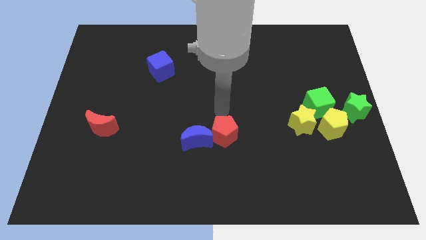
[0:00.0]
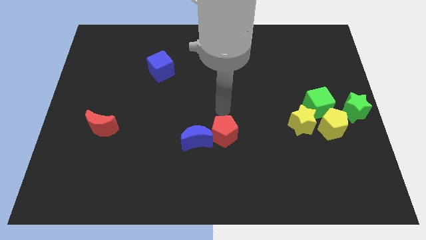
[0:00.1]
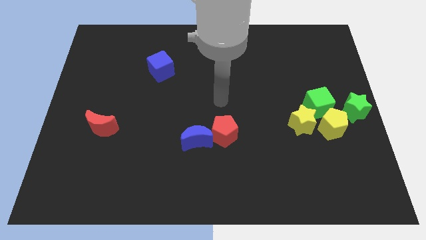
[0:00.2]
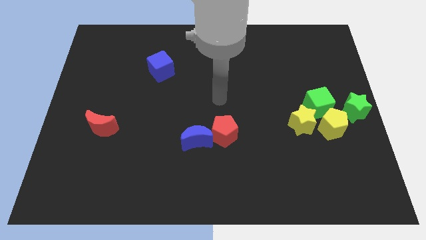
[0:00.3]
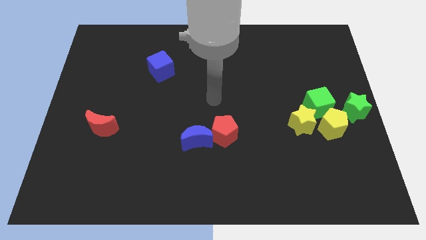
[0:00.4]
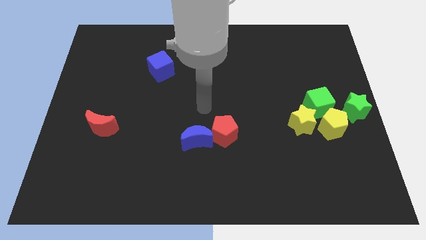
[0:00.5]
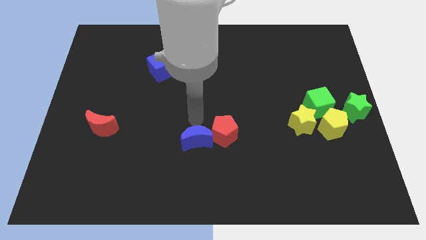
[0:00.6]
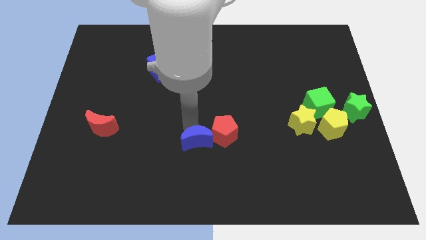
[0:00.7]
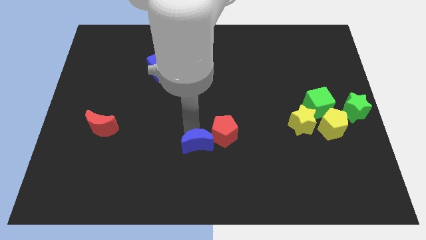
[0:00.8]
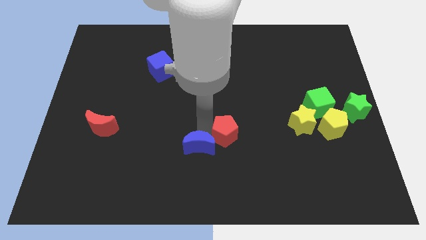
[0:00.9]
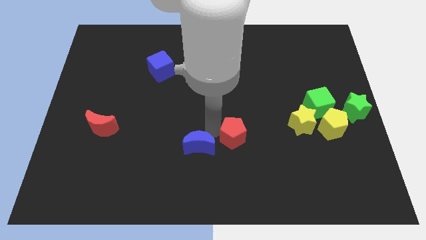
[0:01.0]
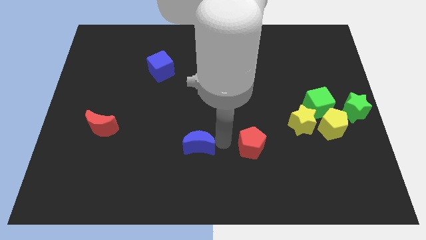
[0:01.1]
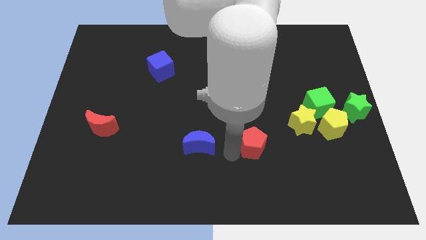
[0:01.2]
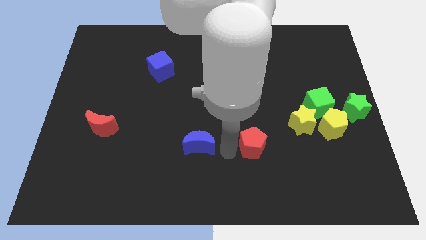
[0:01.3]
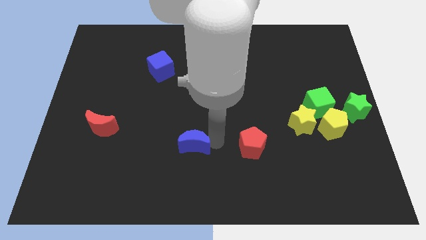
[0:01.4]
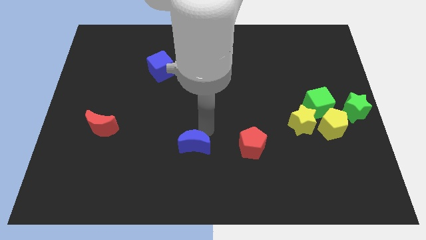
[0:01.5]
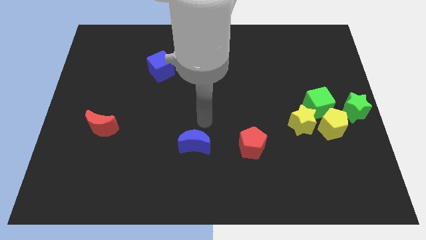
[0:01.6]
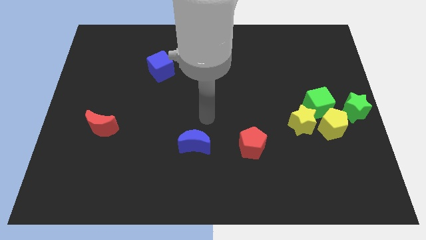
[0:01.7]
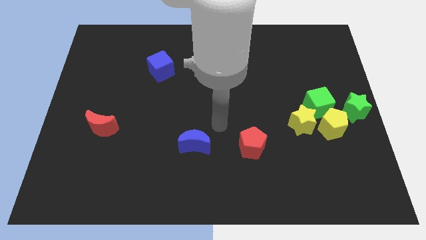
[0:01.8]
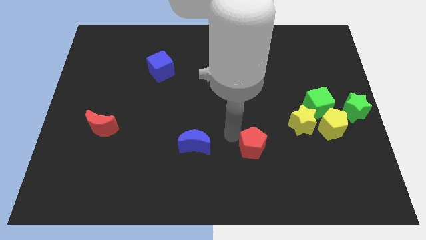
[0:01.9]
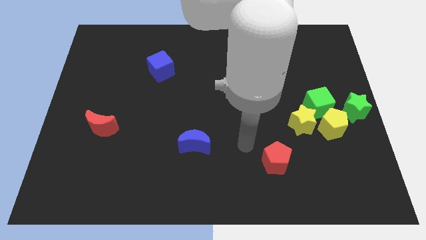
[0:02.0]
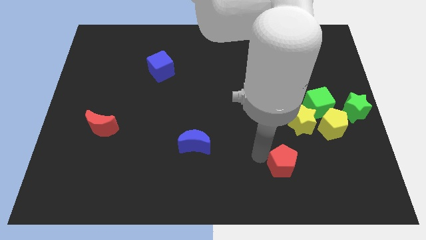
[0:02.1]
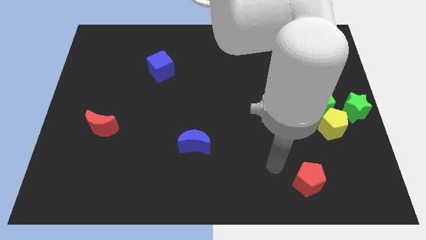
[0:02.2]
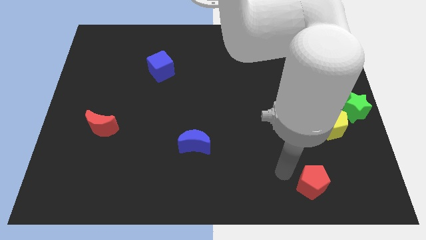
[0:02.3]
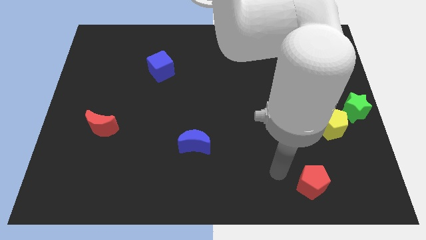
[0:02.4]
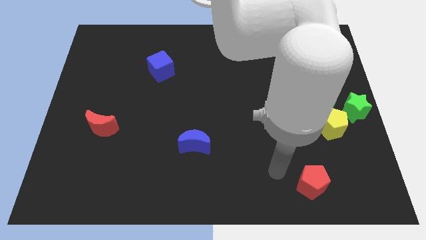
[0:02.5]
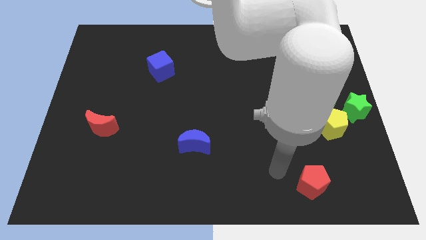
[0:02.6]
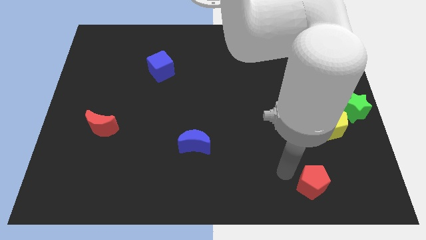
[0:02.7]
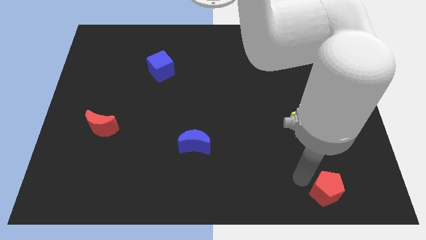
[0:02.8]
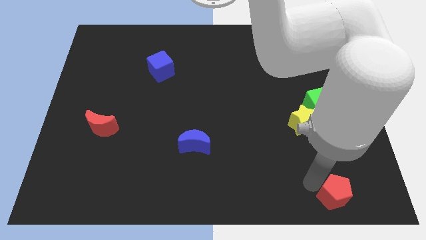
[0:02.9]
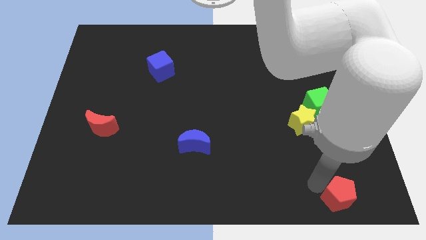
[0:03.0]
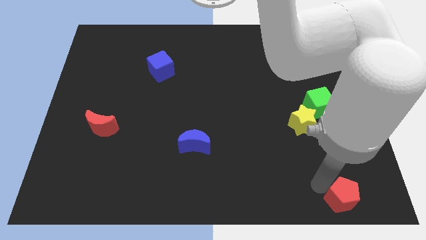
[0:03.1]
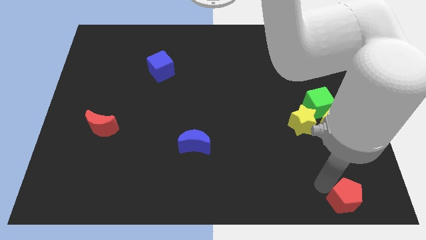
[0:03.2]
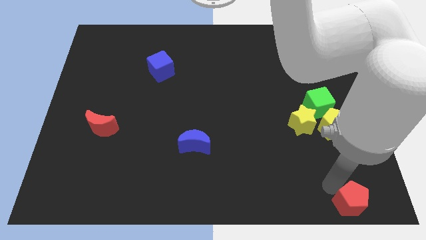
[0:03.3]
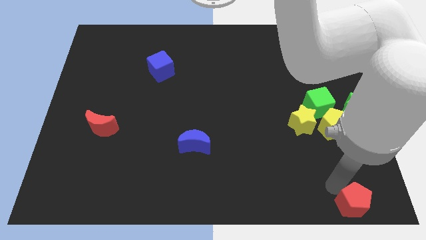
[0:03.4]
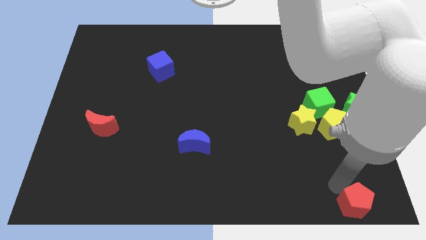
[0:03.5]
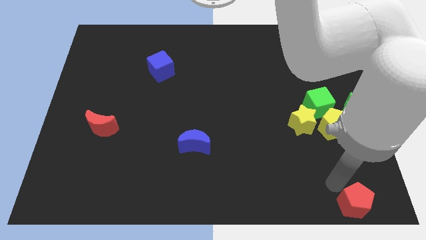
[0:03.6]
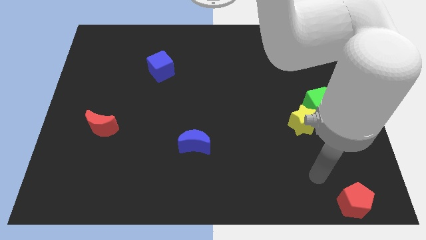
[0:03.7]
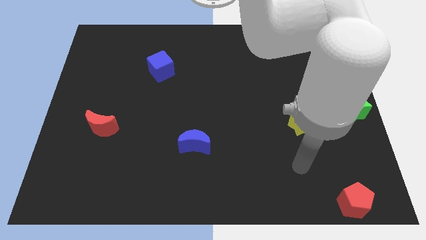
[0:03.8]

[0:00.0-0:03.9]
place the red pentagon vertically below the yellow pentagon

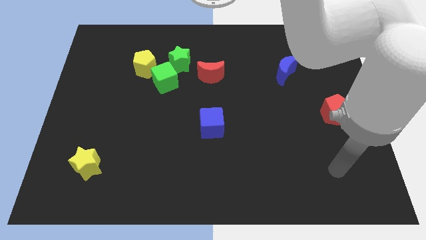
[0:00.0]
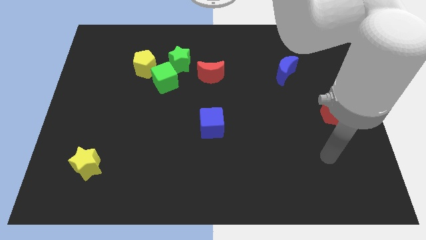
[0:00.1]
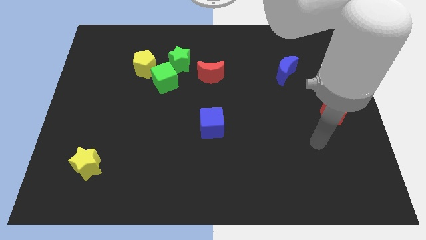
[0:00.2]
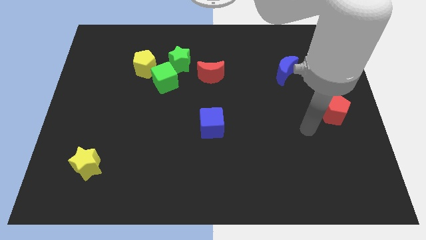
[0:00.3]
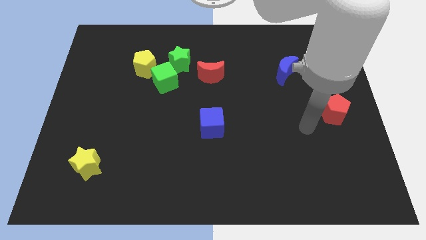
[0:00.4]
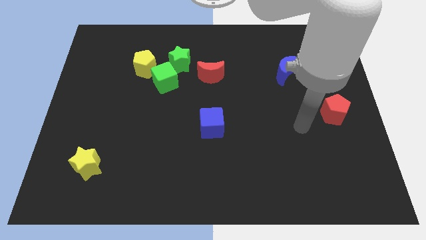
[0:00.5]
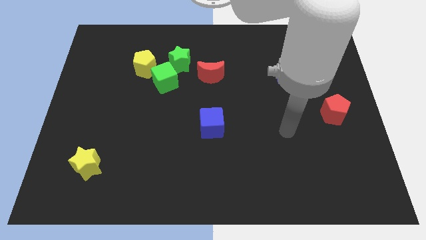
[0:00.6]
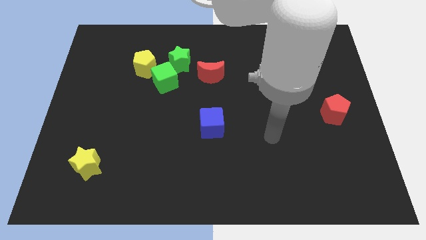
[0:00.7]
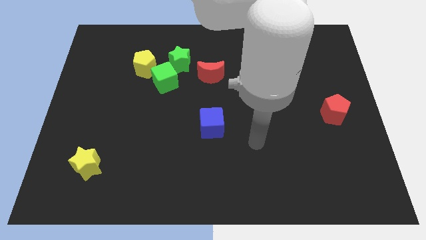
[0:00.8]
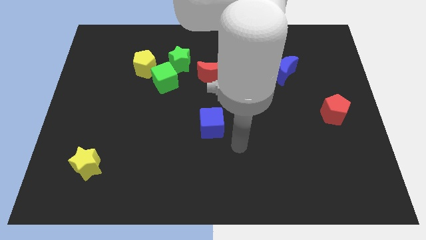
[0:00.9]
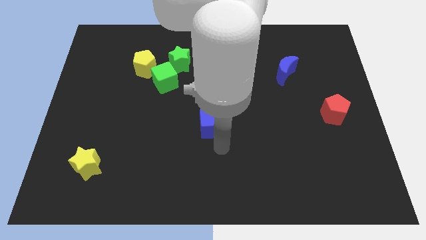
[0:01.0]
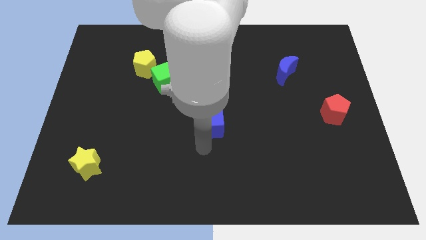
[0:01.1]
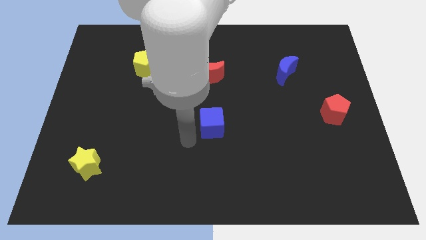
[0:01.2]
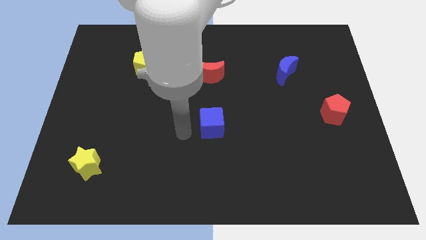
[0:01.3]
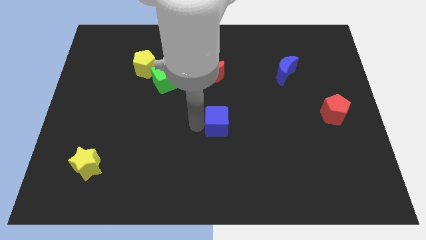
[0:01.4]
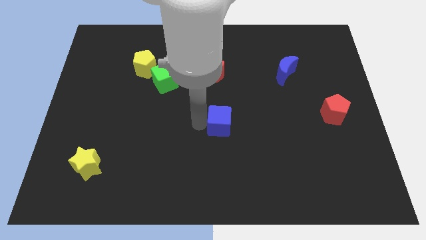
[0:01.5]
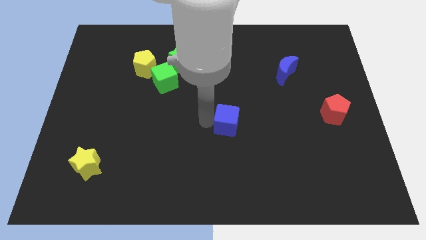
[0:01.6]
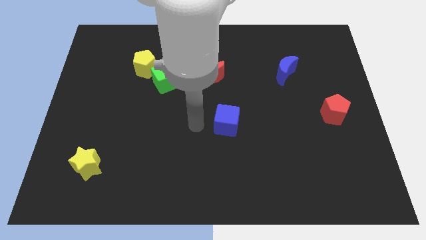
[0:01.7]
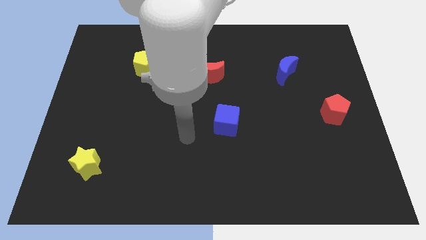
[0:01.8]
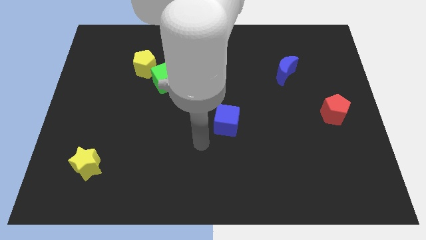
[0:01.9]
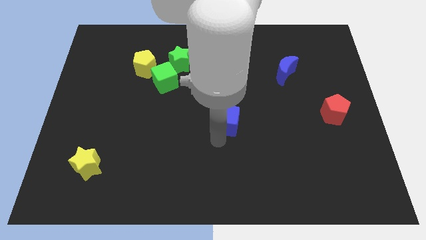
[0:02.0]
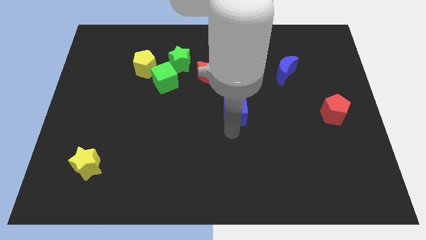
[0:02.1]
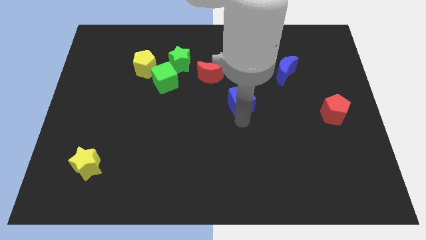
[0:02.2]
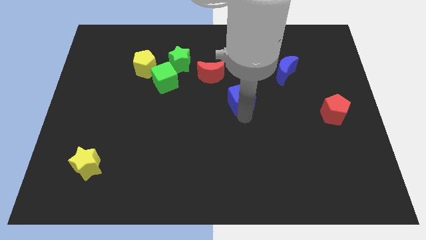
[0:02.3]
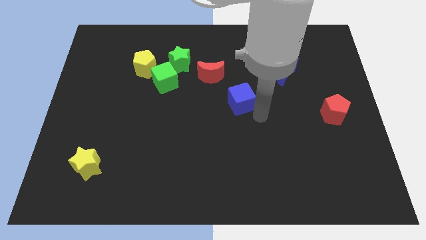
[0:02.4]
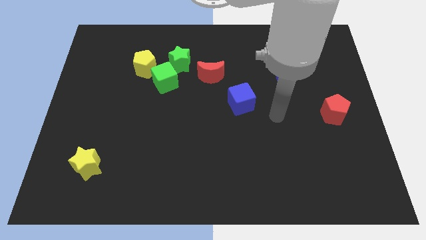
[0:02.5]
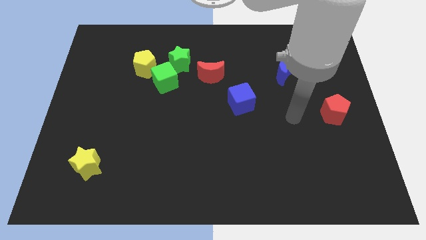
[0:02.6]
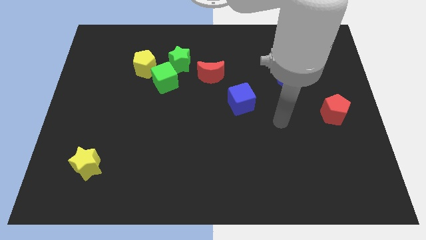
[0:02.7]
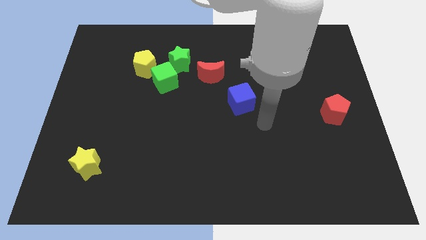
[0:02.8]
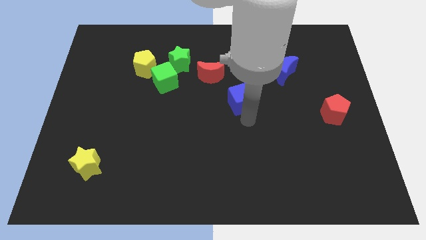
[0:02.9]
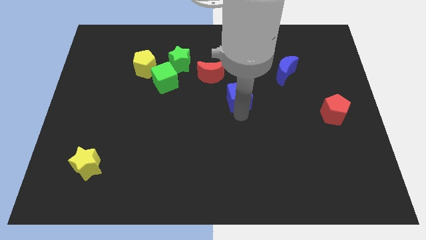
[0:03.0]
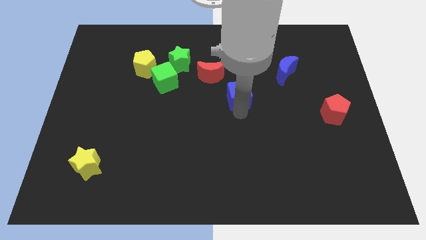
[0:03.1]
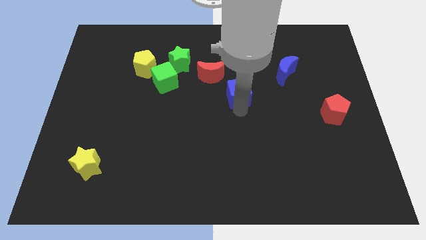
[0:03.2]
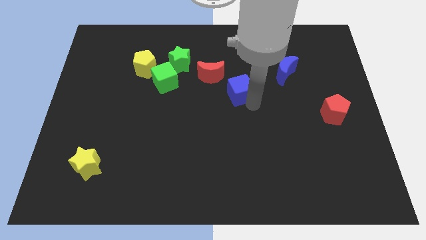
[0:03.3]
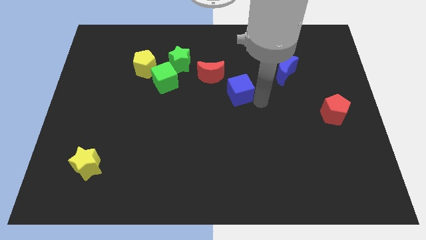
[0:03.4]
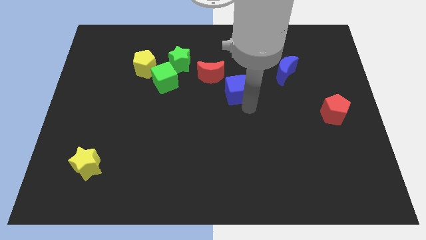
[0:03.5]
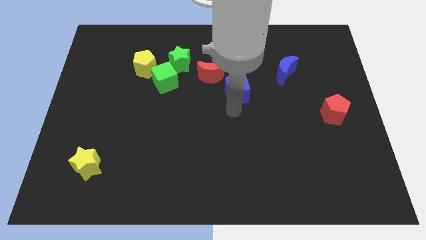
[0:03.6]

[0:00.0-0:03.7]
push the blue cube towards the top side of the board

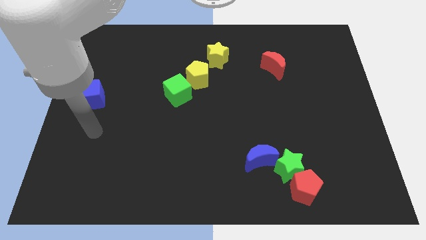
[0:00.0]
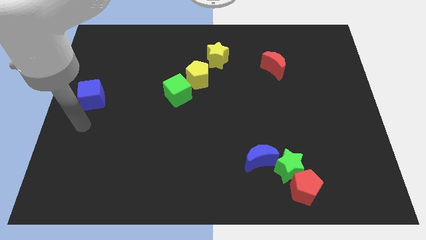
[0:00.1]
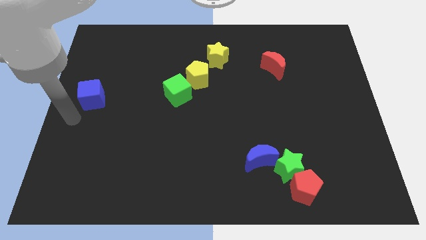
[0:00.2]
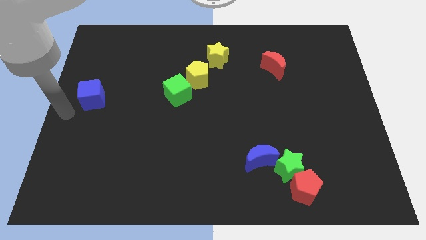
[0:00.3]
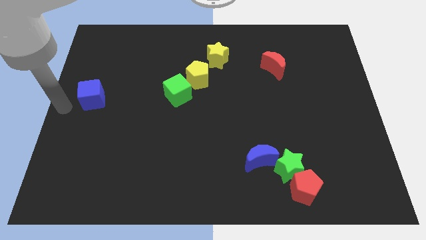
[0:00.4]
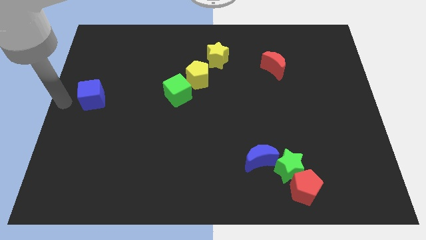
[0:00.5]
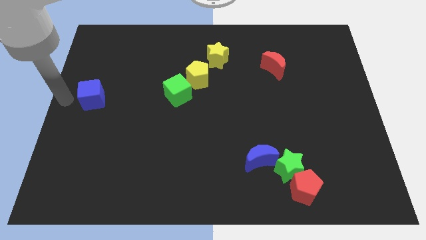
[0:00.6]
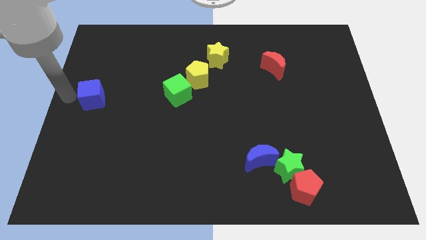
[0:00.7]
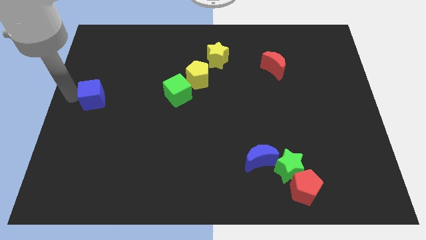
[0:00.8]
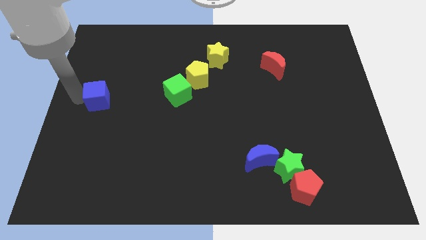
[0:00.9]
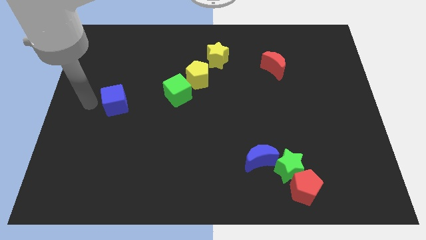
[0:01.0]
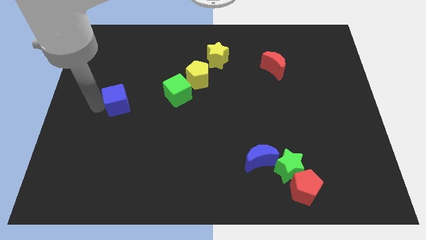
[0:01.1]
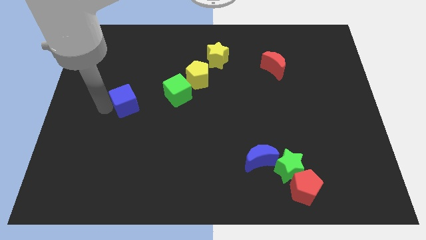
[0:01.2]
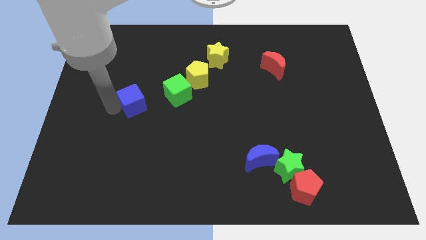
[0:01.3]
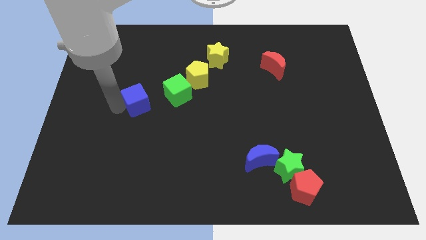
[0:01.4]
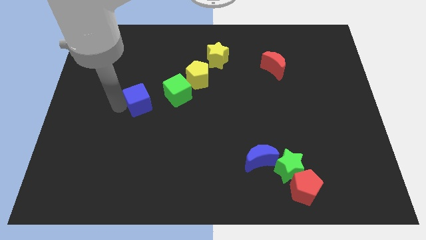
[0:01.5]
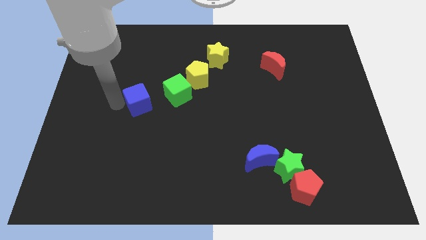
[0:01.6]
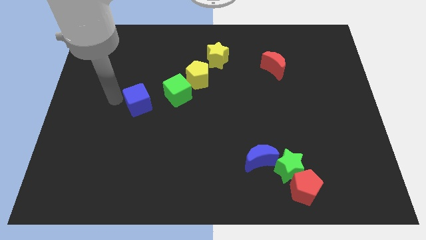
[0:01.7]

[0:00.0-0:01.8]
move the blue cube towards the green cube
